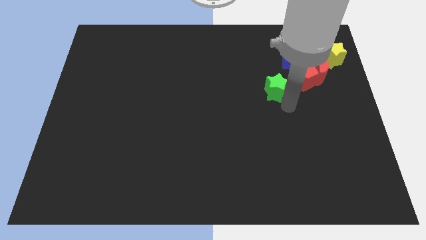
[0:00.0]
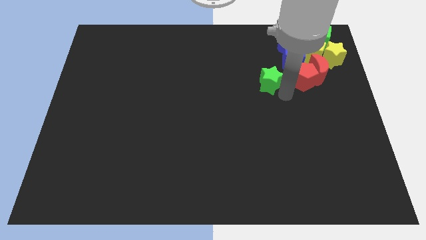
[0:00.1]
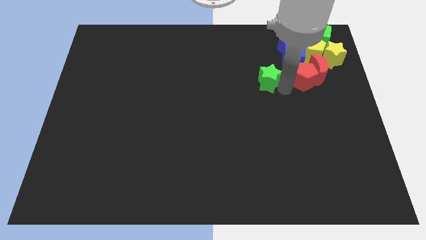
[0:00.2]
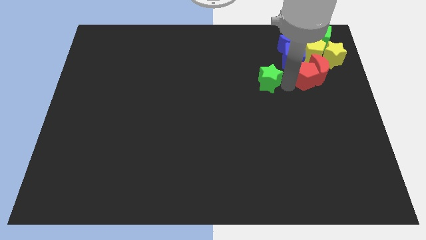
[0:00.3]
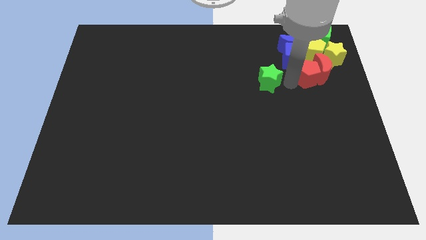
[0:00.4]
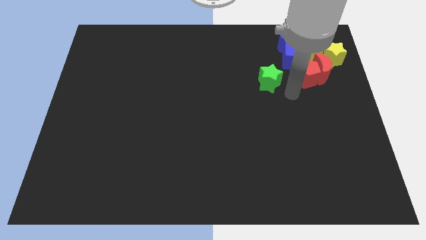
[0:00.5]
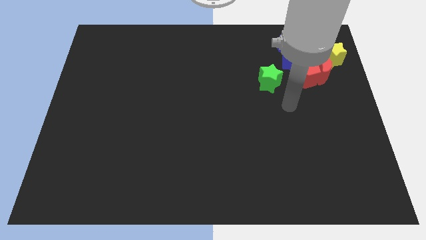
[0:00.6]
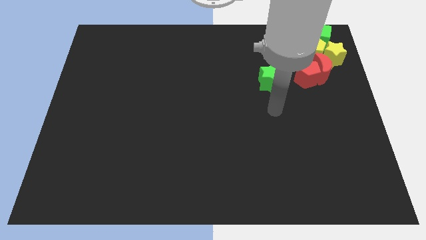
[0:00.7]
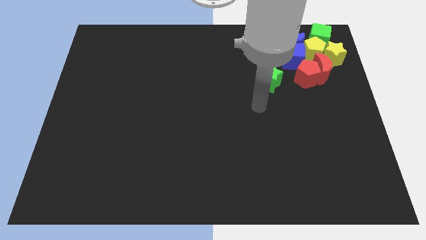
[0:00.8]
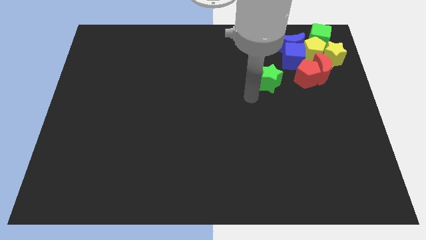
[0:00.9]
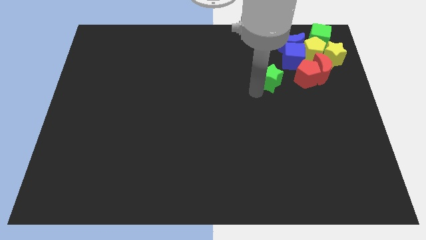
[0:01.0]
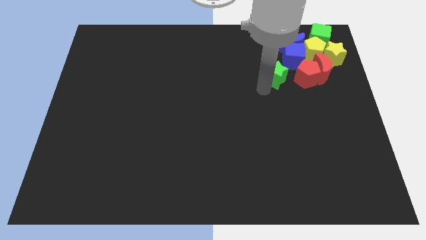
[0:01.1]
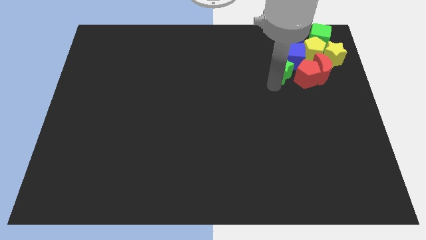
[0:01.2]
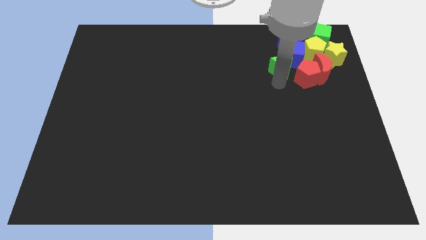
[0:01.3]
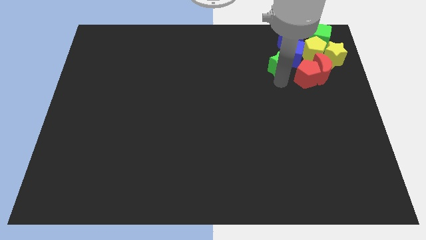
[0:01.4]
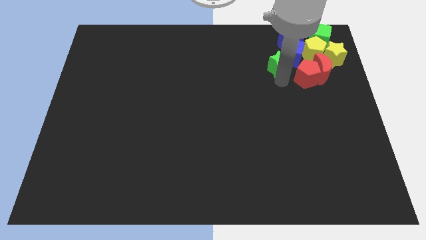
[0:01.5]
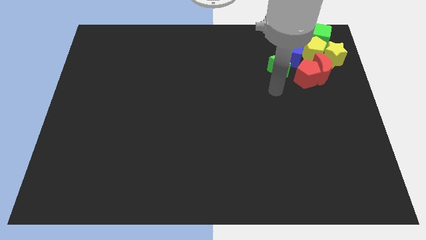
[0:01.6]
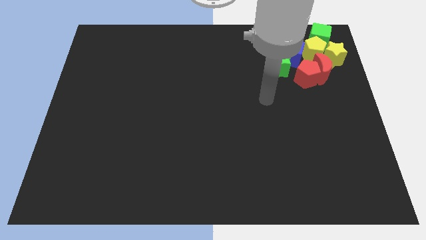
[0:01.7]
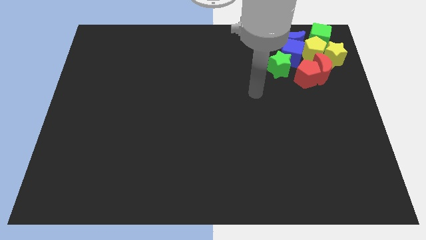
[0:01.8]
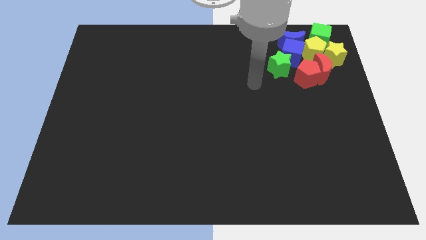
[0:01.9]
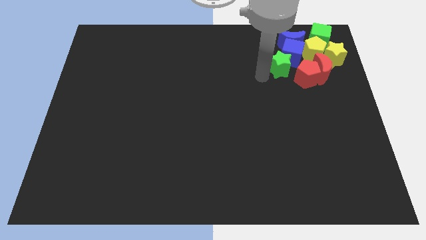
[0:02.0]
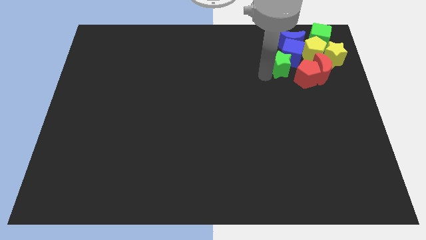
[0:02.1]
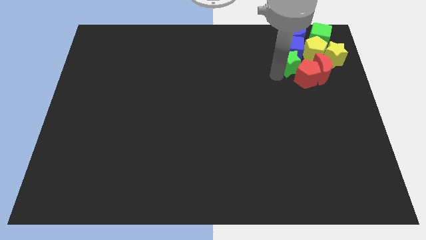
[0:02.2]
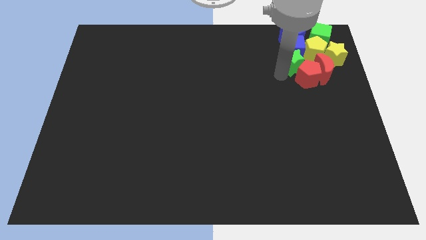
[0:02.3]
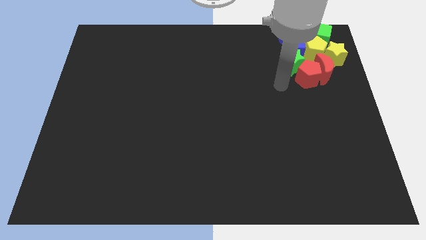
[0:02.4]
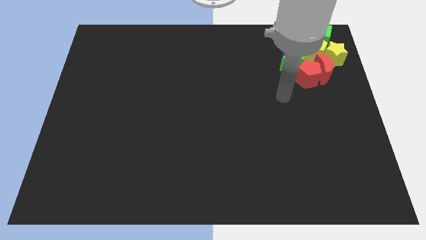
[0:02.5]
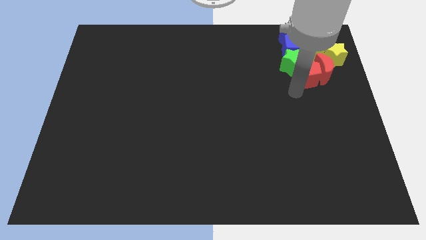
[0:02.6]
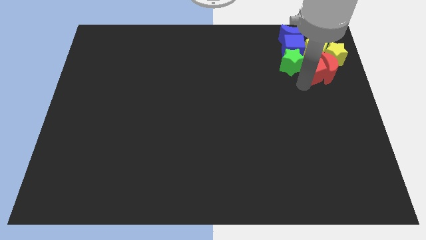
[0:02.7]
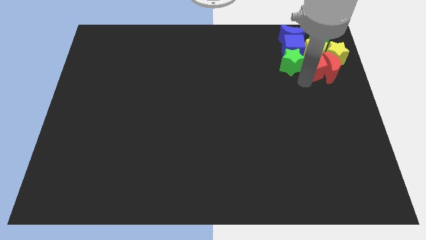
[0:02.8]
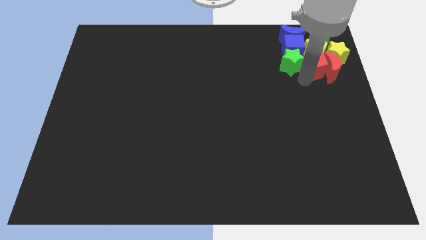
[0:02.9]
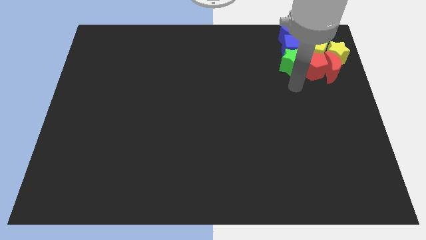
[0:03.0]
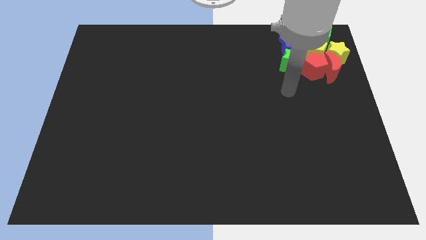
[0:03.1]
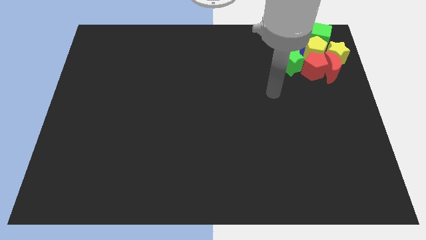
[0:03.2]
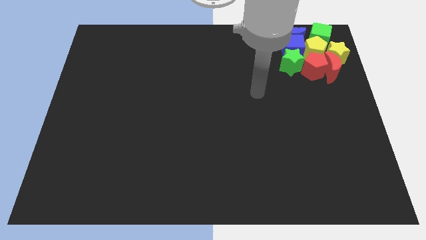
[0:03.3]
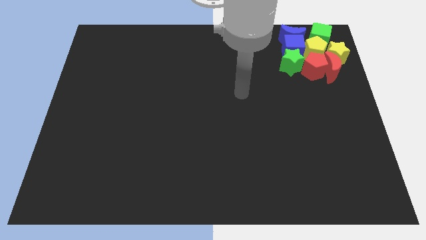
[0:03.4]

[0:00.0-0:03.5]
place the green star below the blue cube

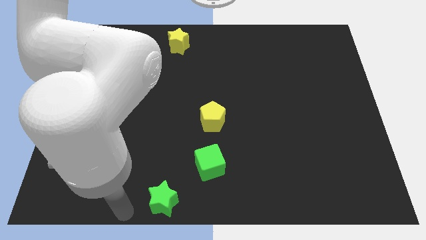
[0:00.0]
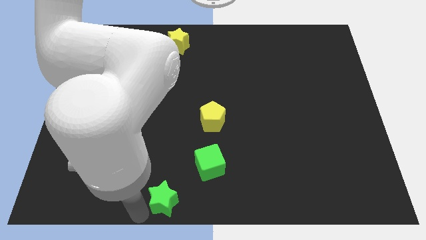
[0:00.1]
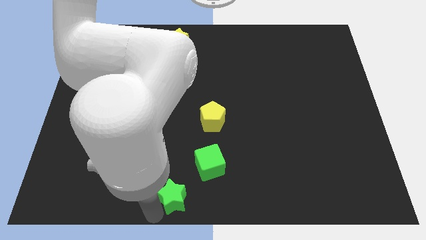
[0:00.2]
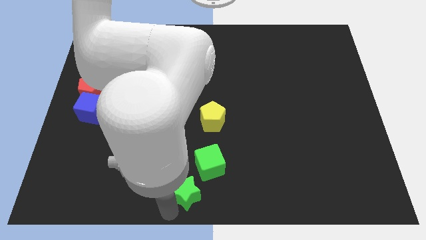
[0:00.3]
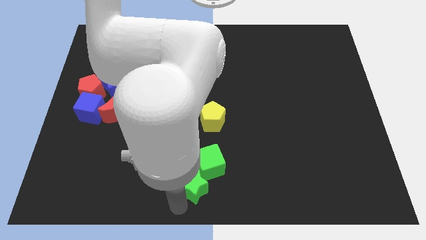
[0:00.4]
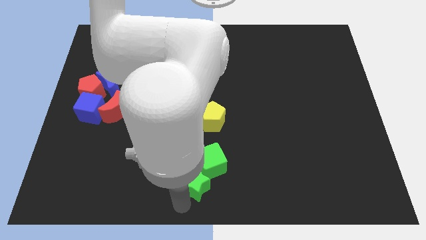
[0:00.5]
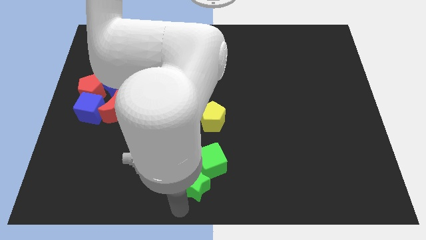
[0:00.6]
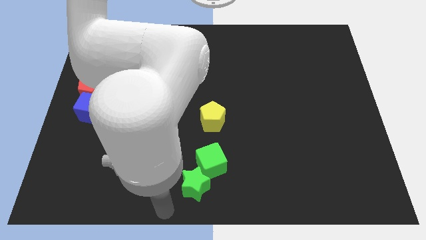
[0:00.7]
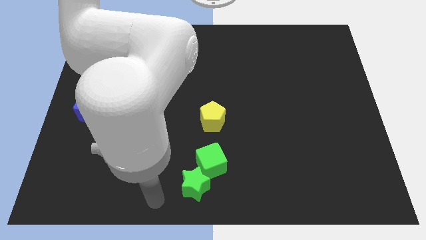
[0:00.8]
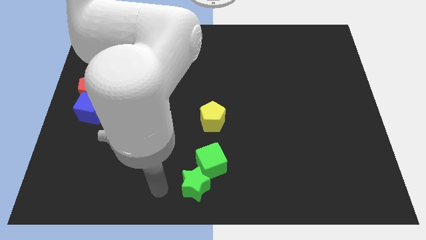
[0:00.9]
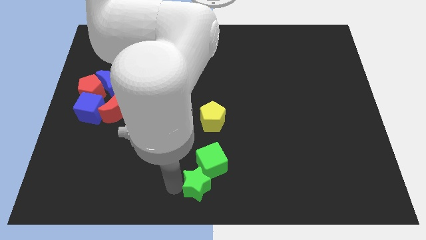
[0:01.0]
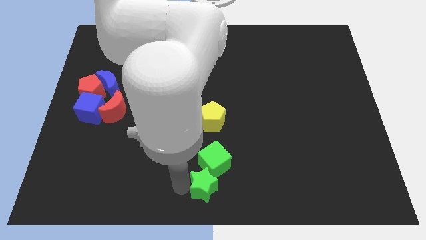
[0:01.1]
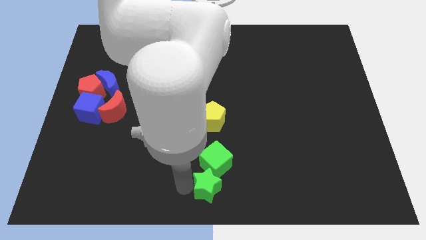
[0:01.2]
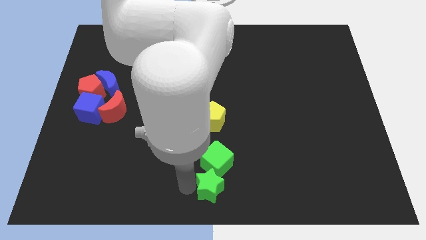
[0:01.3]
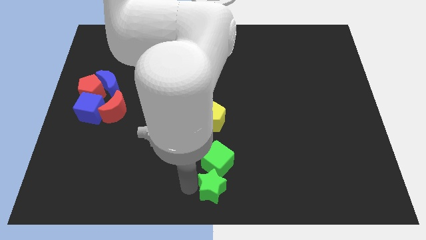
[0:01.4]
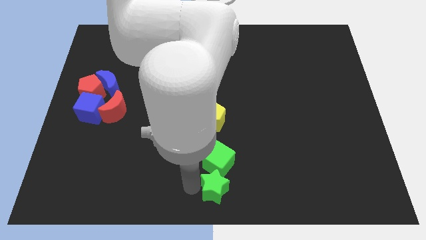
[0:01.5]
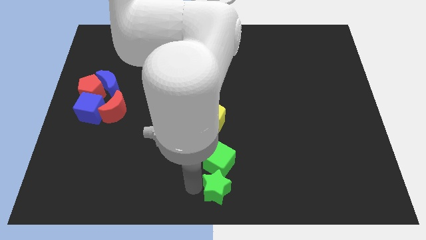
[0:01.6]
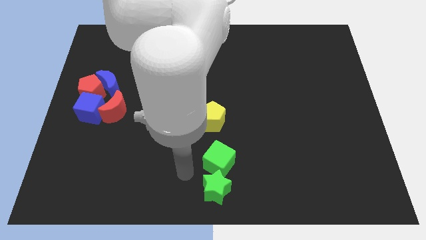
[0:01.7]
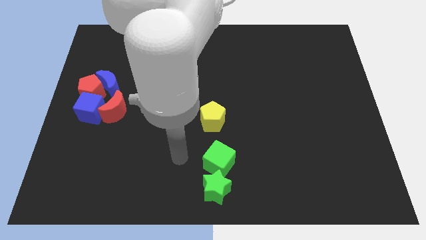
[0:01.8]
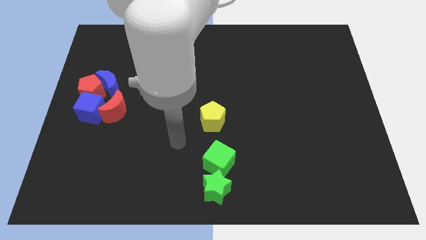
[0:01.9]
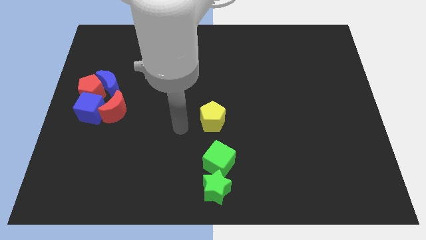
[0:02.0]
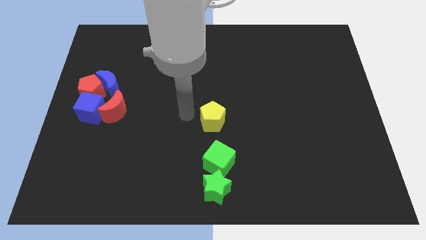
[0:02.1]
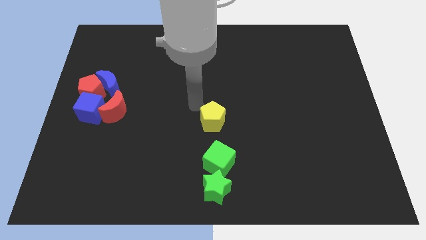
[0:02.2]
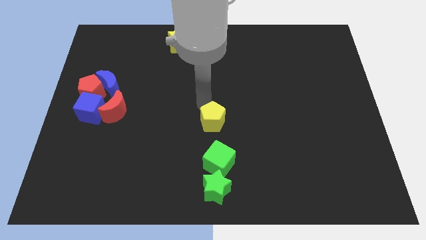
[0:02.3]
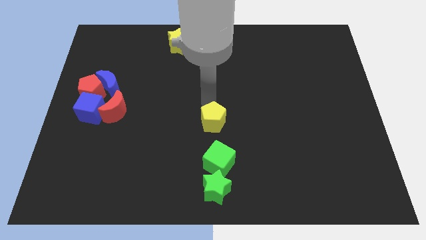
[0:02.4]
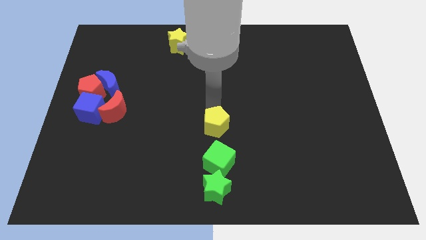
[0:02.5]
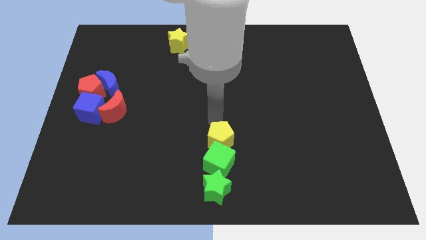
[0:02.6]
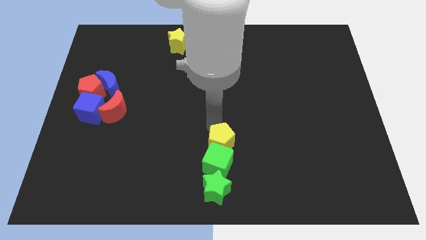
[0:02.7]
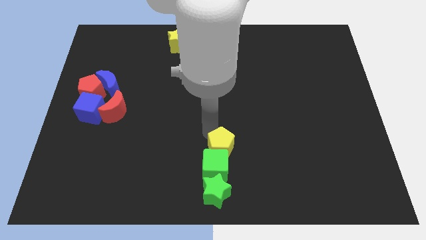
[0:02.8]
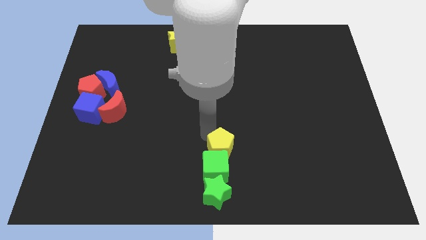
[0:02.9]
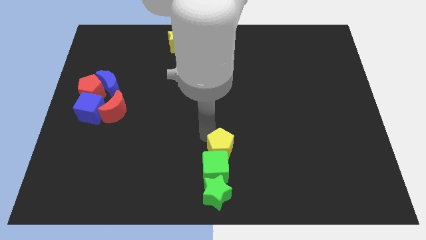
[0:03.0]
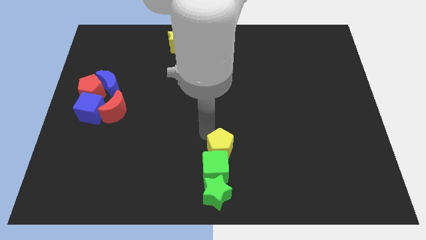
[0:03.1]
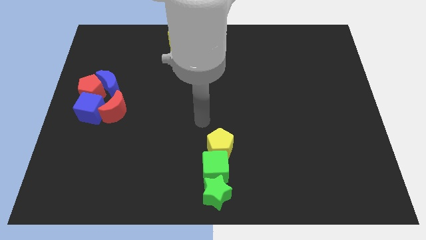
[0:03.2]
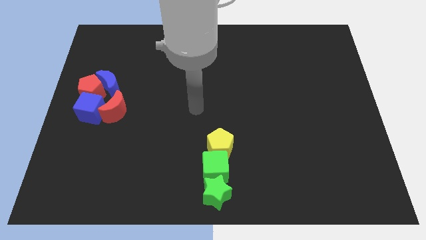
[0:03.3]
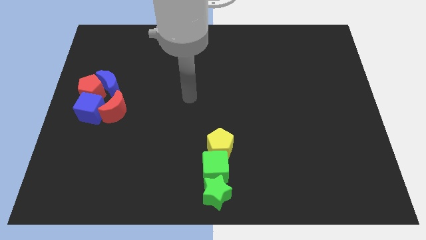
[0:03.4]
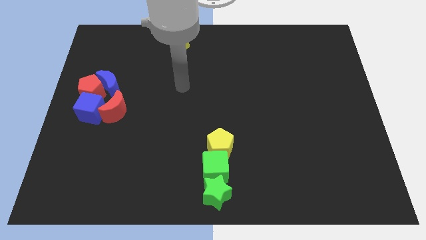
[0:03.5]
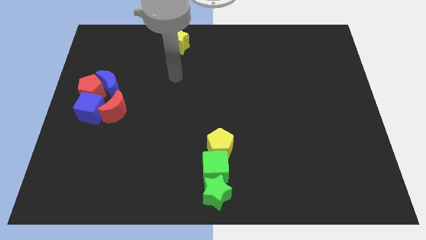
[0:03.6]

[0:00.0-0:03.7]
place green blocks and the yellow pentagon in a vertical line

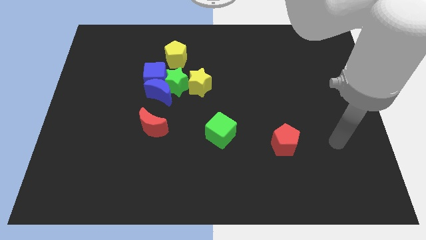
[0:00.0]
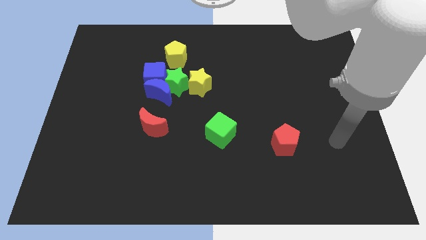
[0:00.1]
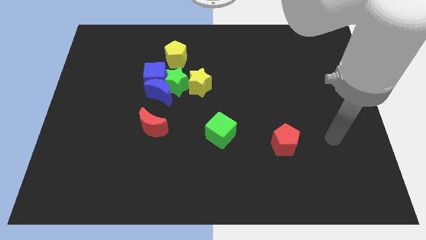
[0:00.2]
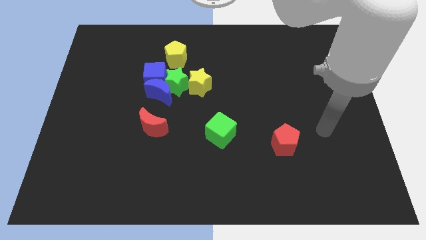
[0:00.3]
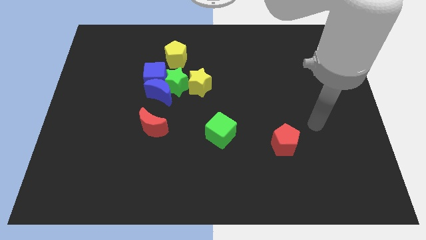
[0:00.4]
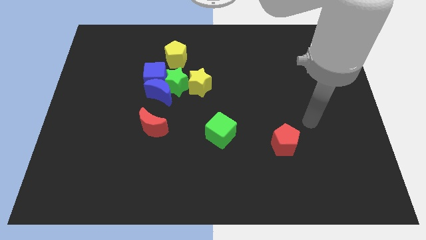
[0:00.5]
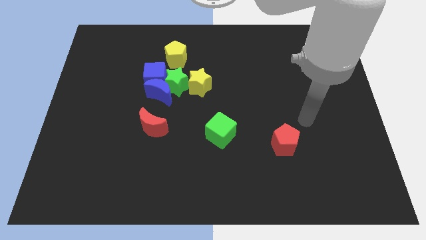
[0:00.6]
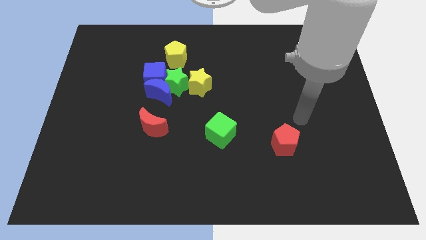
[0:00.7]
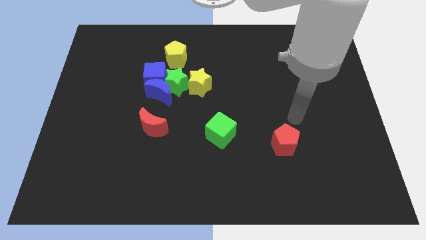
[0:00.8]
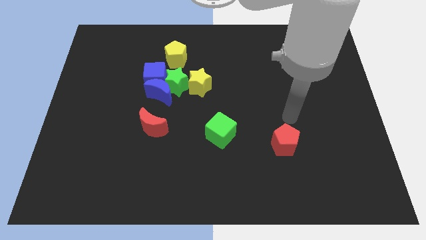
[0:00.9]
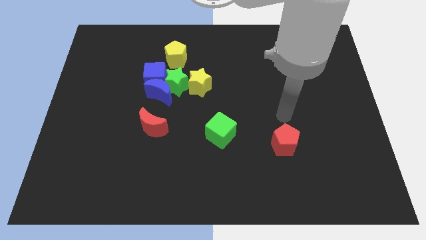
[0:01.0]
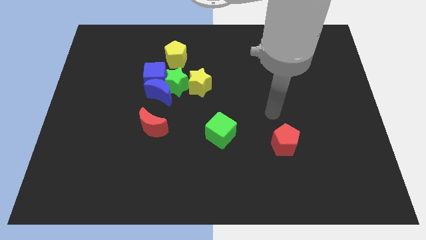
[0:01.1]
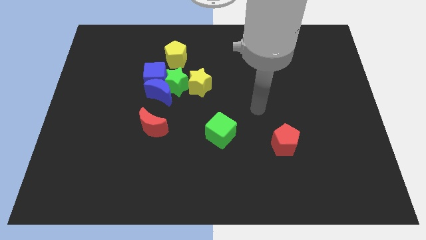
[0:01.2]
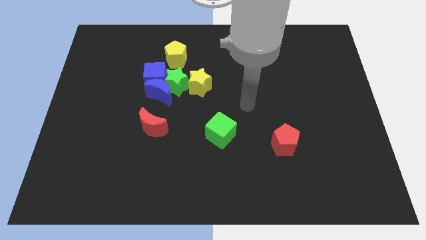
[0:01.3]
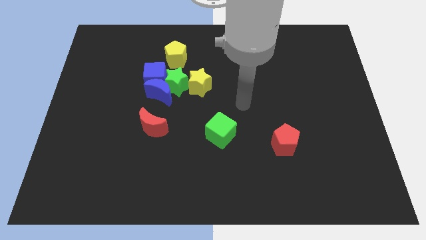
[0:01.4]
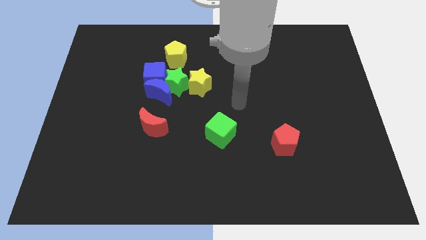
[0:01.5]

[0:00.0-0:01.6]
point the arm above the green cube

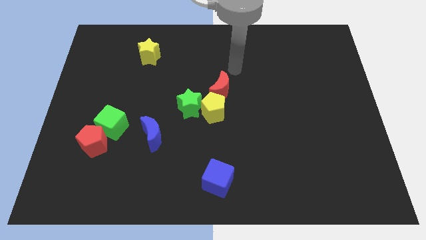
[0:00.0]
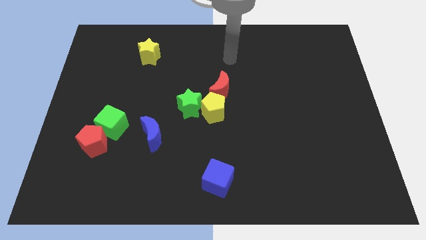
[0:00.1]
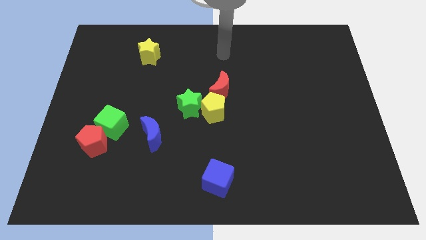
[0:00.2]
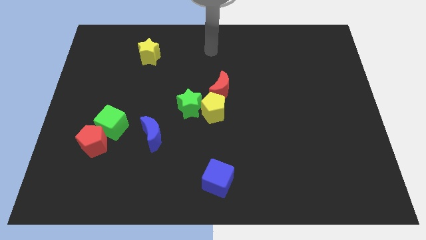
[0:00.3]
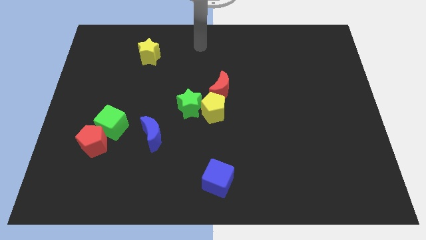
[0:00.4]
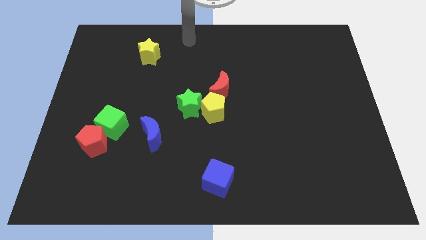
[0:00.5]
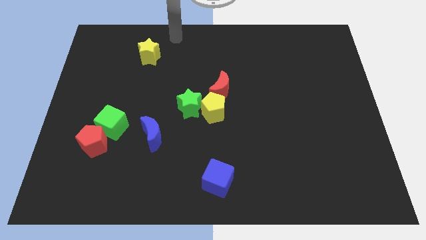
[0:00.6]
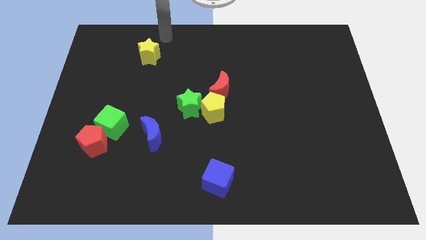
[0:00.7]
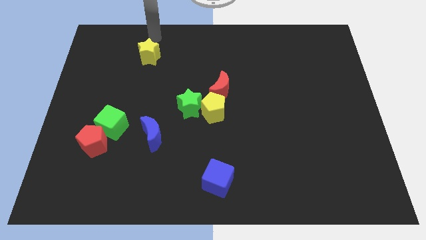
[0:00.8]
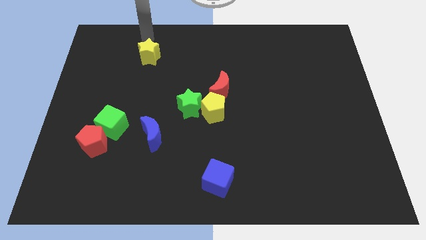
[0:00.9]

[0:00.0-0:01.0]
put your arm at the top of yellow star
